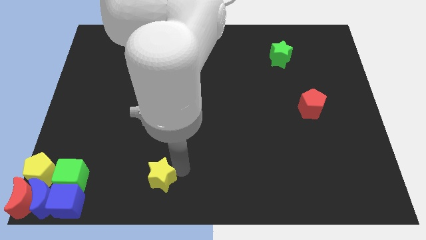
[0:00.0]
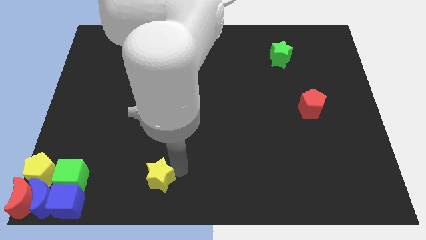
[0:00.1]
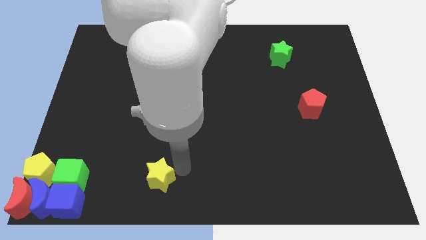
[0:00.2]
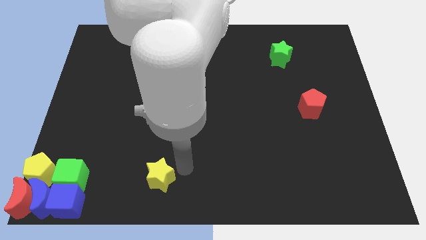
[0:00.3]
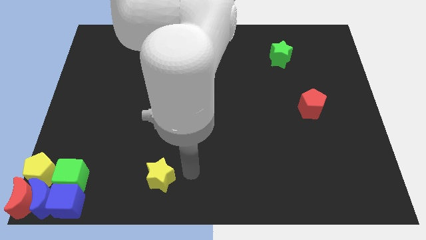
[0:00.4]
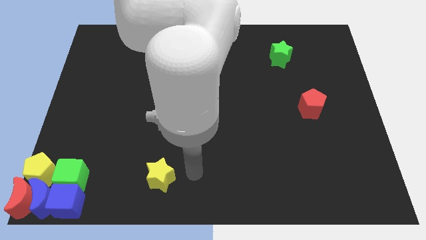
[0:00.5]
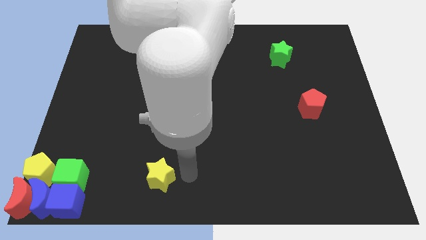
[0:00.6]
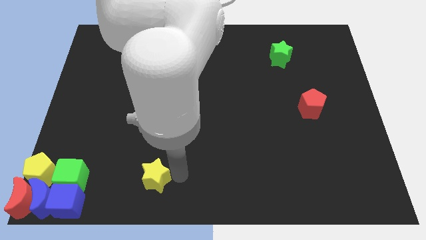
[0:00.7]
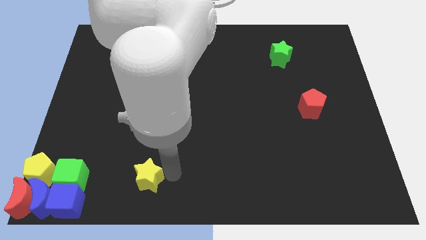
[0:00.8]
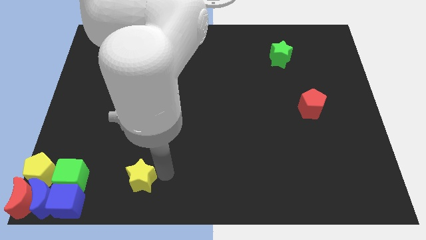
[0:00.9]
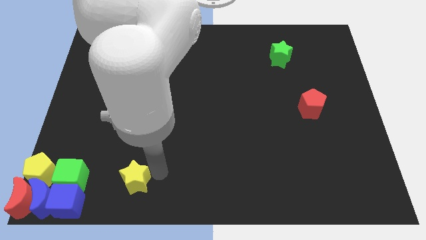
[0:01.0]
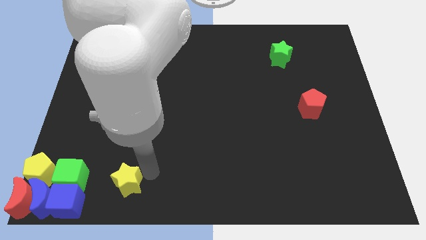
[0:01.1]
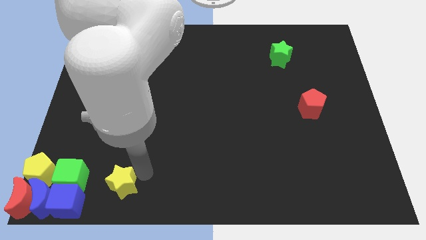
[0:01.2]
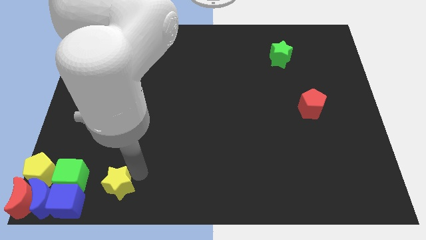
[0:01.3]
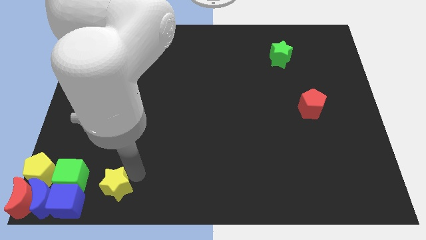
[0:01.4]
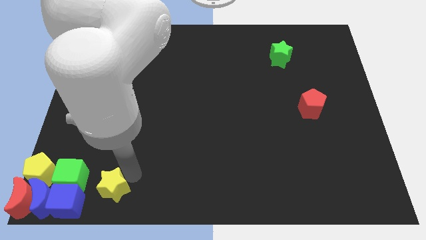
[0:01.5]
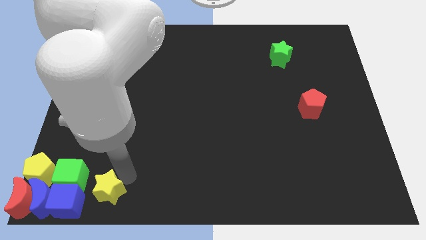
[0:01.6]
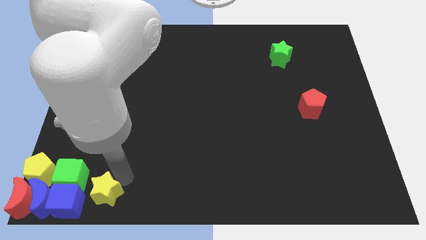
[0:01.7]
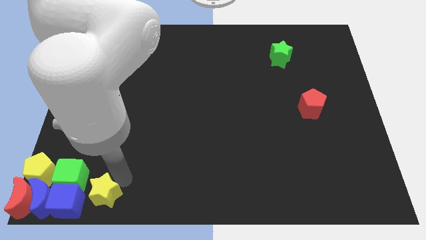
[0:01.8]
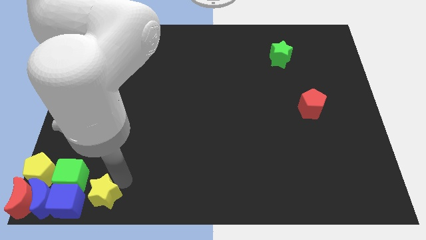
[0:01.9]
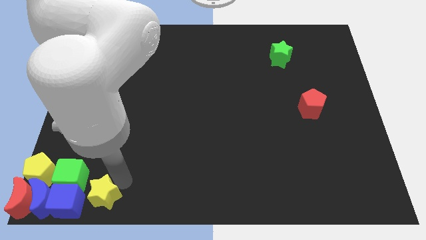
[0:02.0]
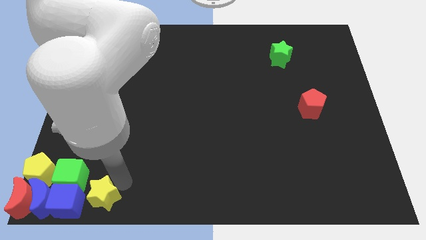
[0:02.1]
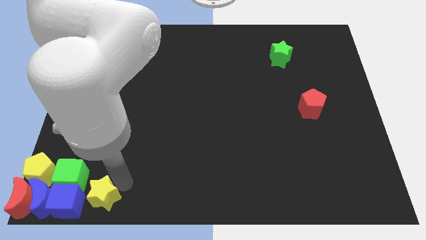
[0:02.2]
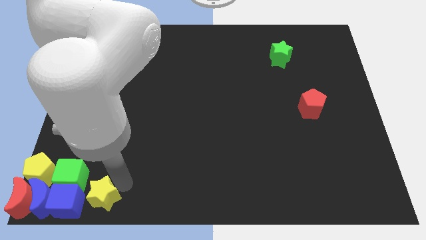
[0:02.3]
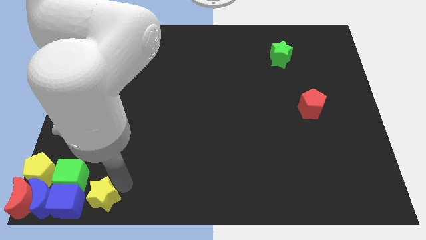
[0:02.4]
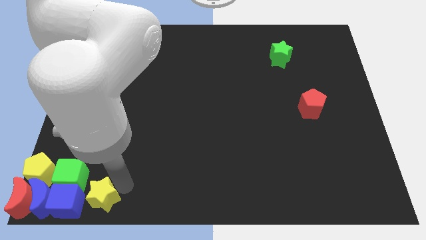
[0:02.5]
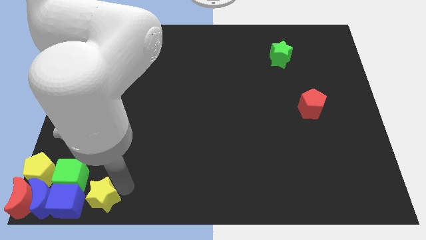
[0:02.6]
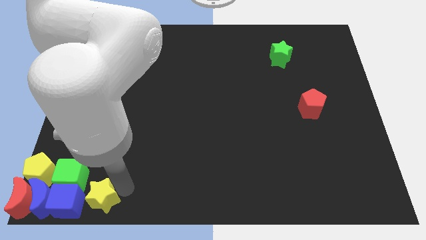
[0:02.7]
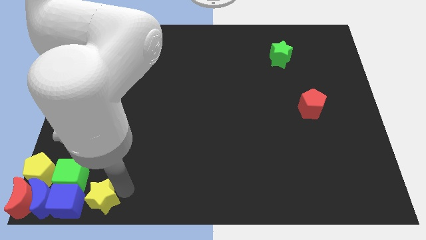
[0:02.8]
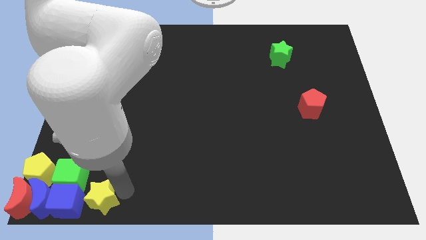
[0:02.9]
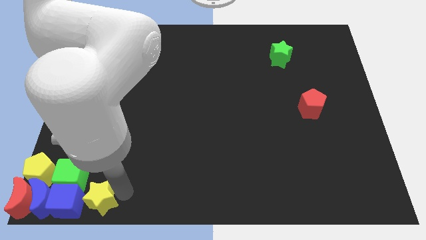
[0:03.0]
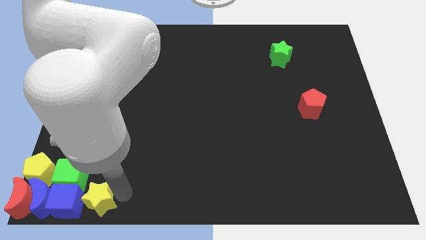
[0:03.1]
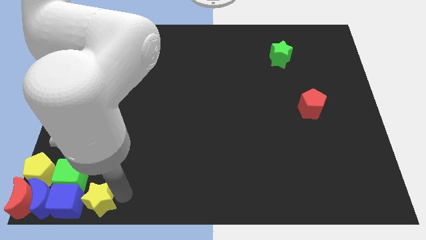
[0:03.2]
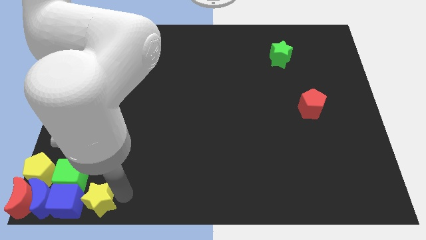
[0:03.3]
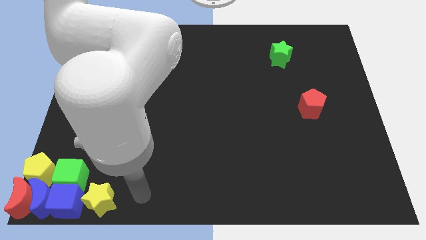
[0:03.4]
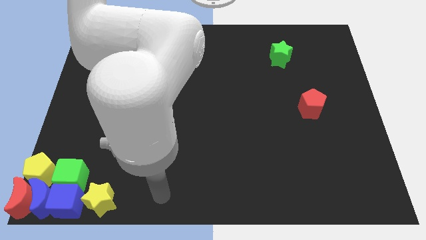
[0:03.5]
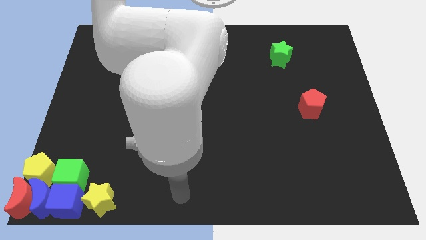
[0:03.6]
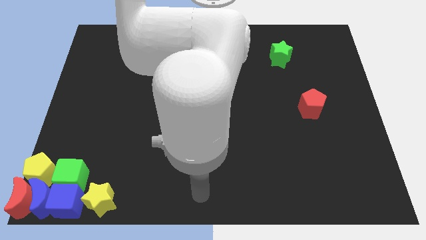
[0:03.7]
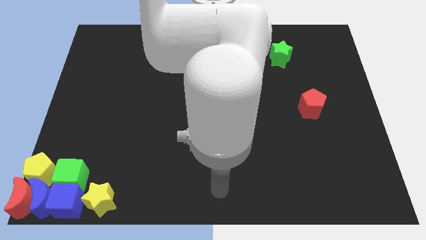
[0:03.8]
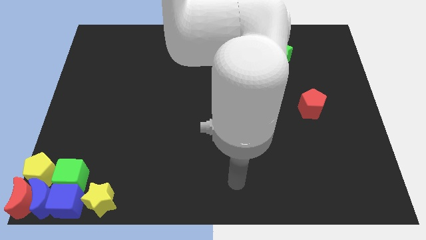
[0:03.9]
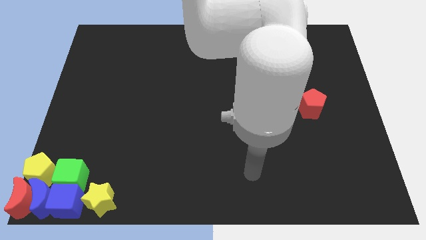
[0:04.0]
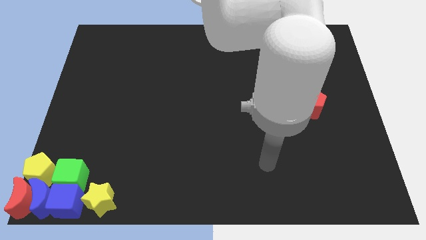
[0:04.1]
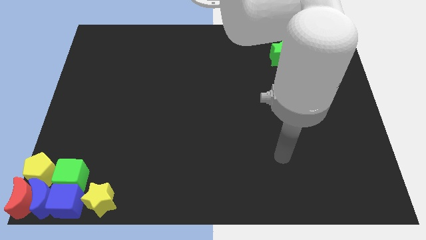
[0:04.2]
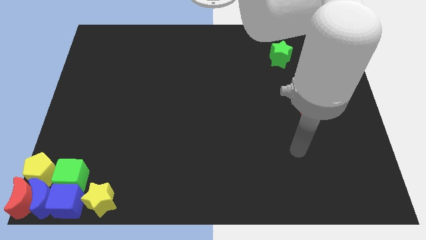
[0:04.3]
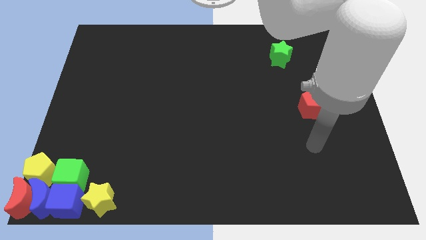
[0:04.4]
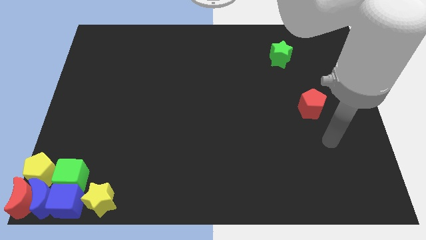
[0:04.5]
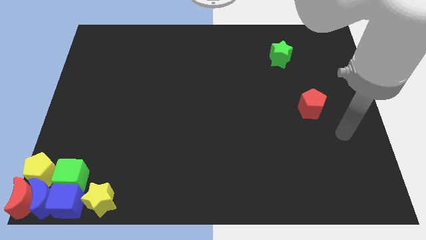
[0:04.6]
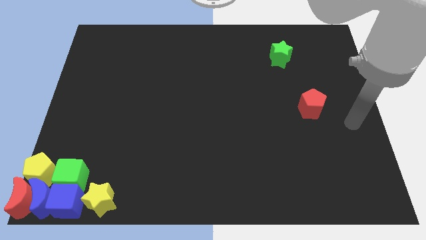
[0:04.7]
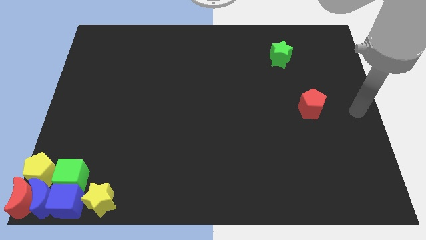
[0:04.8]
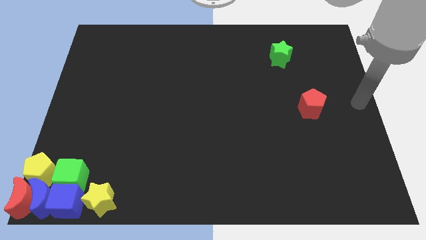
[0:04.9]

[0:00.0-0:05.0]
put the yellow star to the right of the blue and the green cube

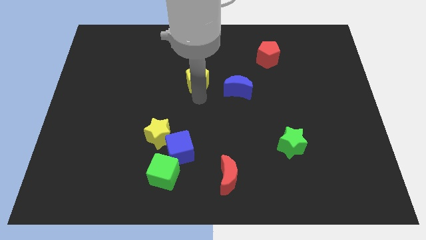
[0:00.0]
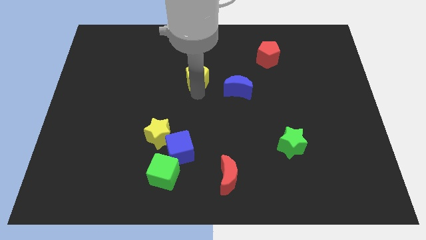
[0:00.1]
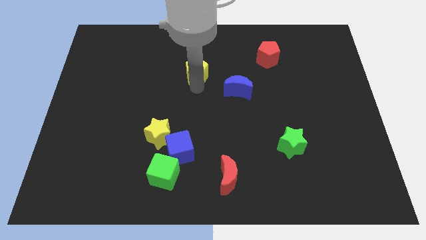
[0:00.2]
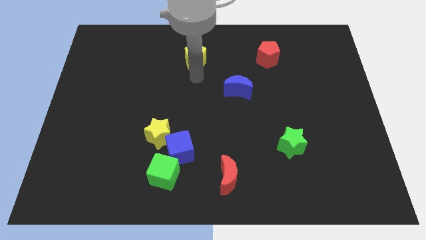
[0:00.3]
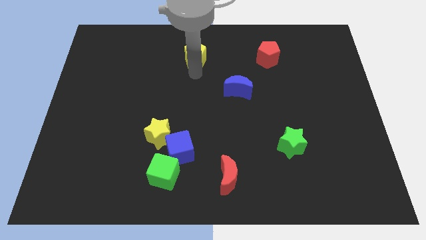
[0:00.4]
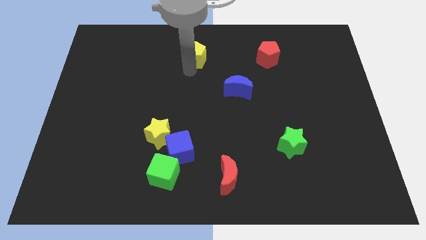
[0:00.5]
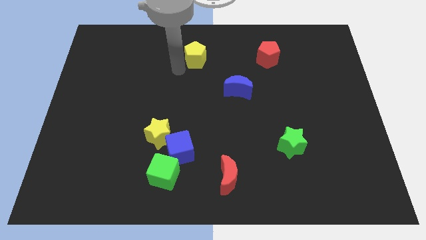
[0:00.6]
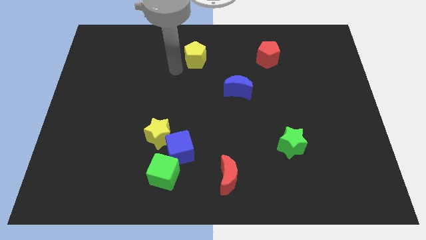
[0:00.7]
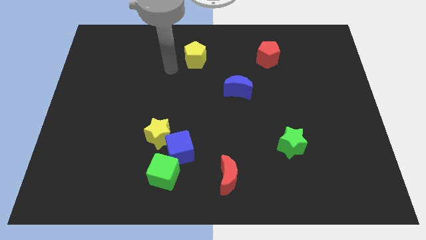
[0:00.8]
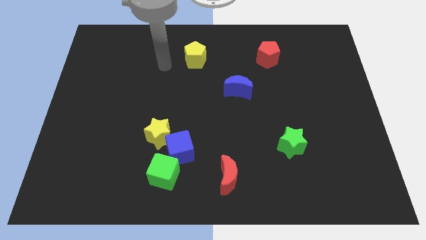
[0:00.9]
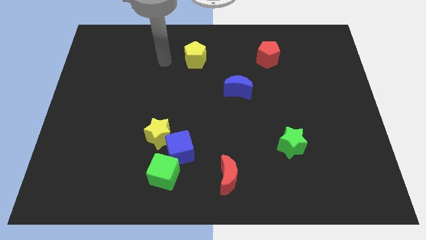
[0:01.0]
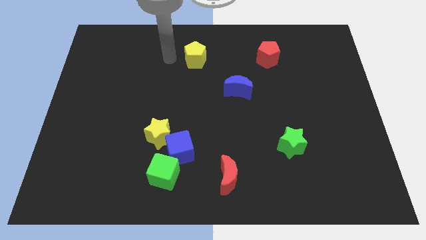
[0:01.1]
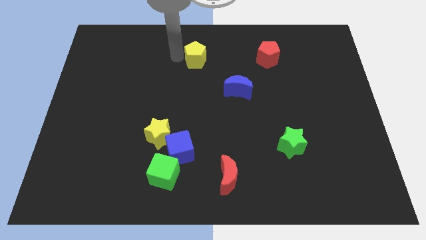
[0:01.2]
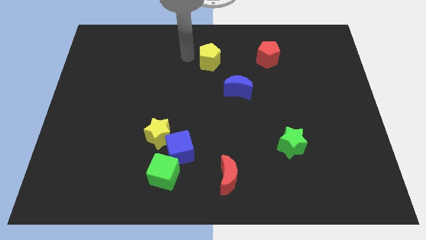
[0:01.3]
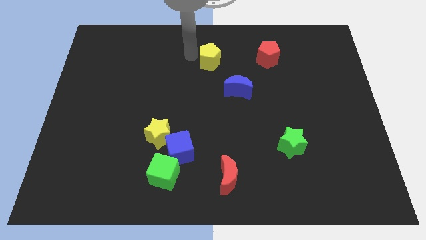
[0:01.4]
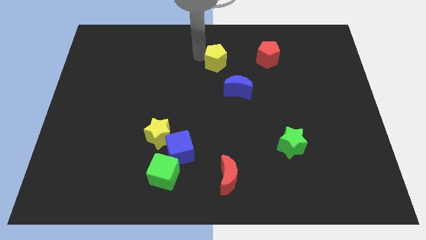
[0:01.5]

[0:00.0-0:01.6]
place the yellow pentagon to the left of the red pentagon

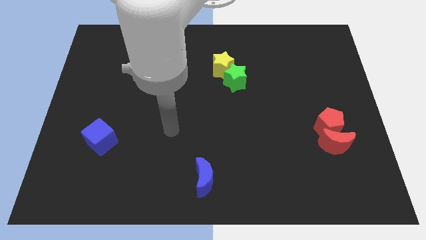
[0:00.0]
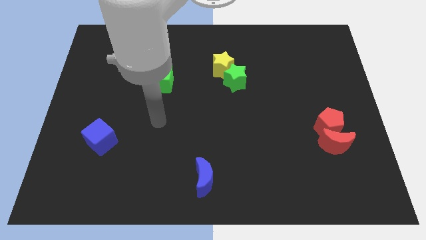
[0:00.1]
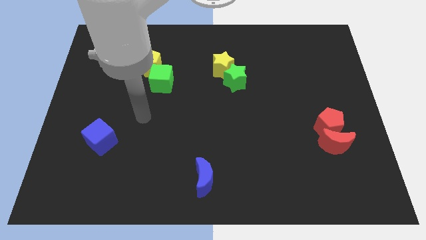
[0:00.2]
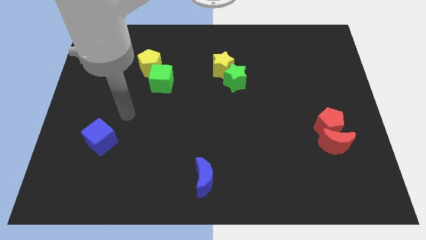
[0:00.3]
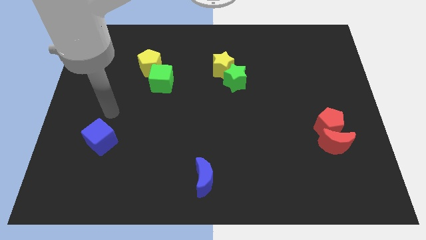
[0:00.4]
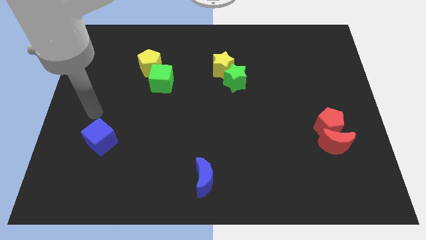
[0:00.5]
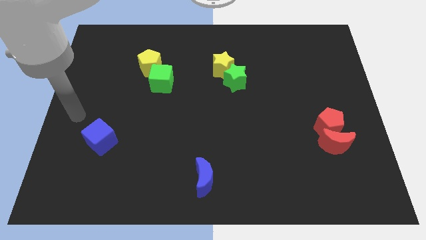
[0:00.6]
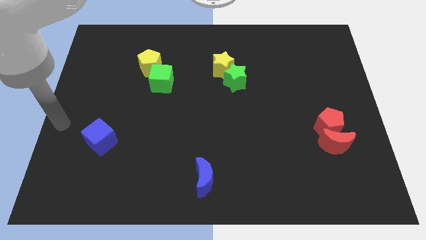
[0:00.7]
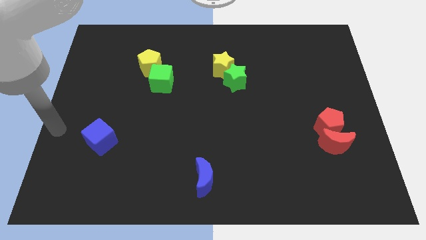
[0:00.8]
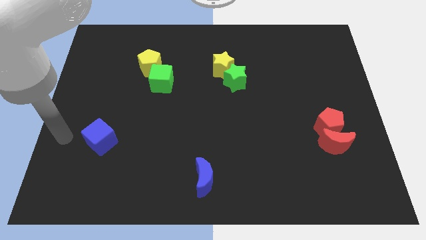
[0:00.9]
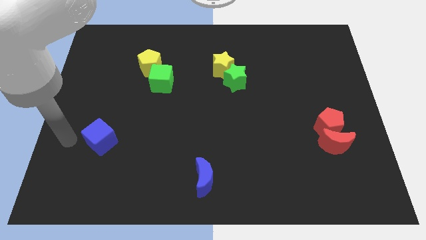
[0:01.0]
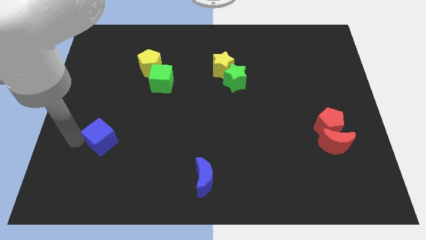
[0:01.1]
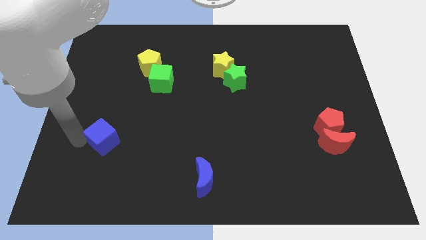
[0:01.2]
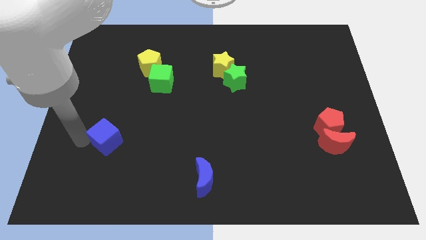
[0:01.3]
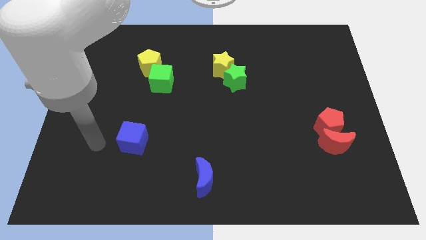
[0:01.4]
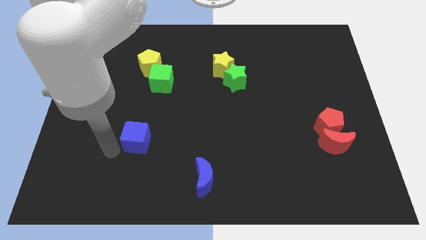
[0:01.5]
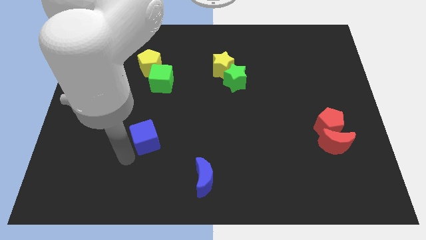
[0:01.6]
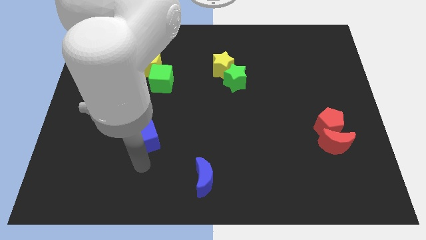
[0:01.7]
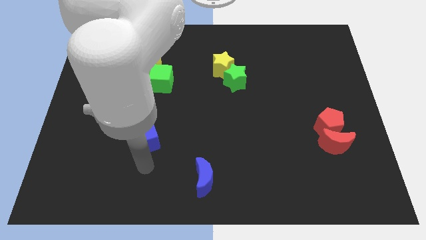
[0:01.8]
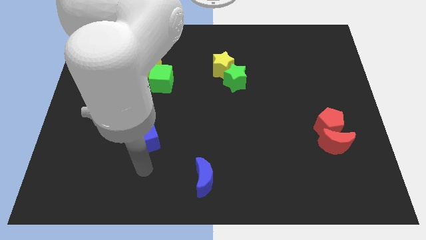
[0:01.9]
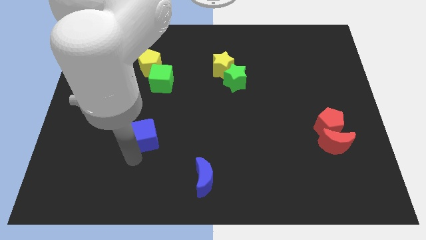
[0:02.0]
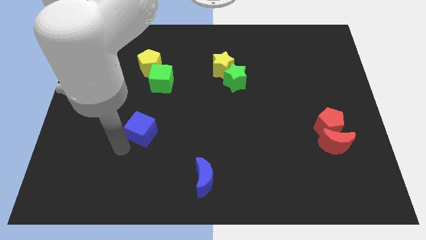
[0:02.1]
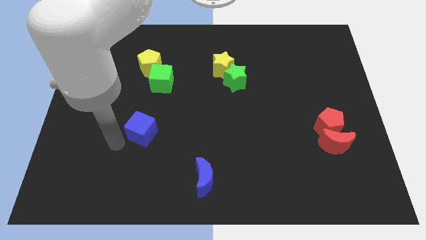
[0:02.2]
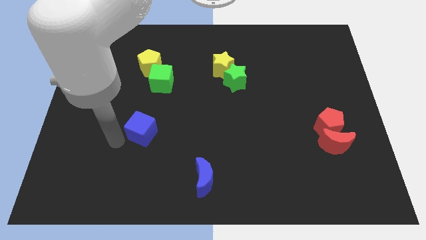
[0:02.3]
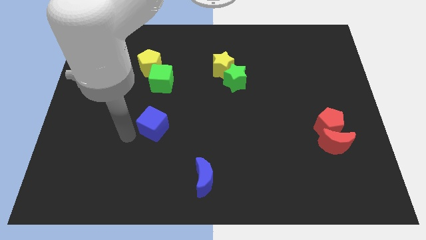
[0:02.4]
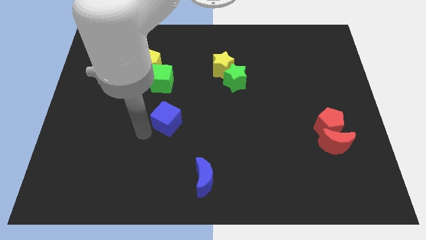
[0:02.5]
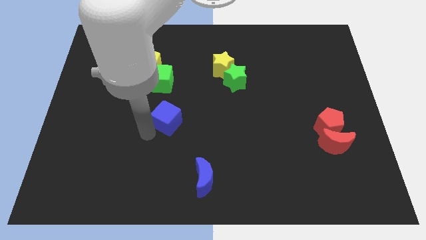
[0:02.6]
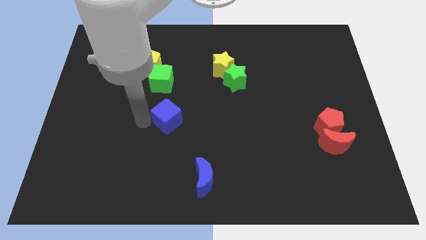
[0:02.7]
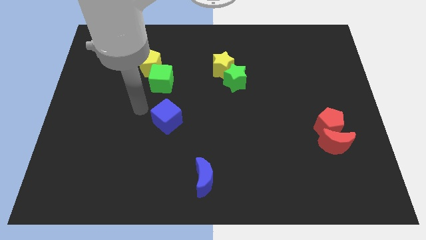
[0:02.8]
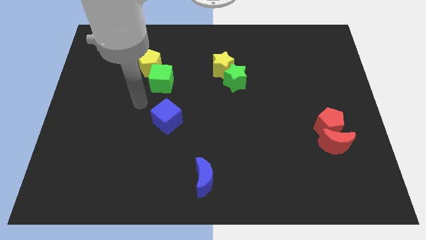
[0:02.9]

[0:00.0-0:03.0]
drag the blue cube below to the green cube
